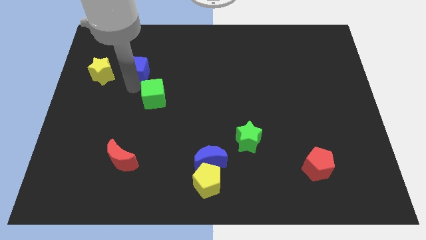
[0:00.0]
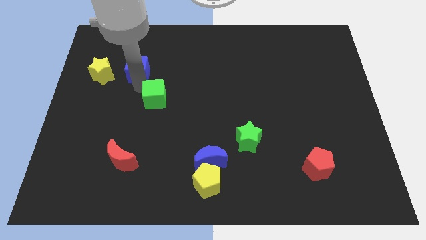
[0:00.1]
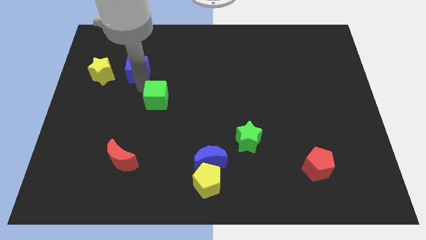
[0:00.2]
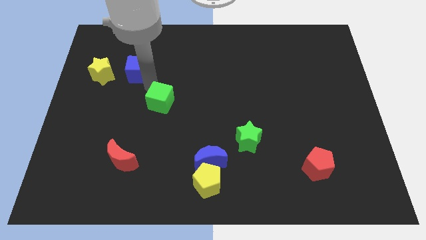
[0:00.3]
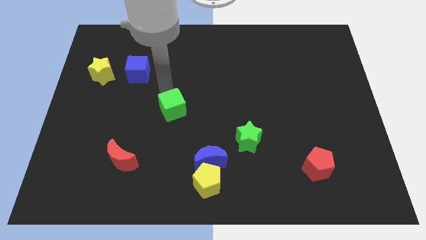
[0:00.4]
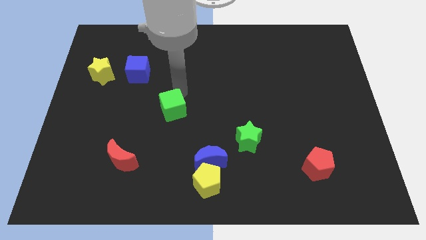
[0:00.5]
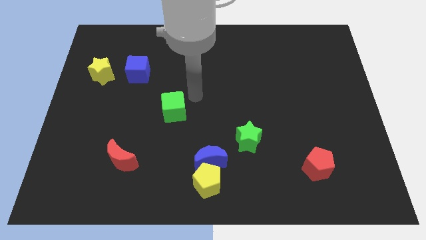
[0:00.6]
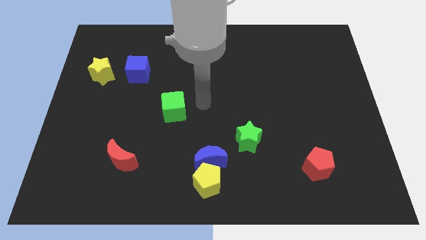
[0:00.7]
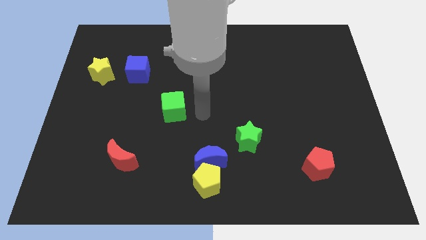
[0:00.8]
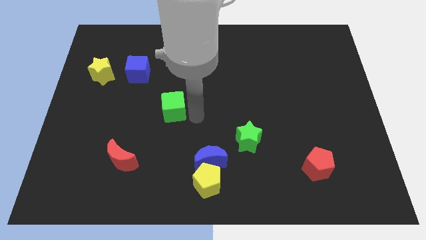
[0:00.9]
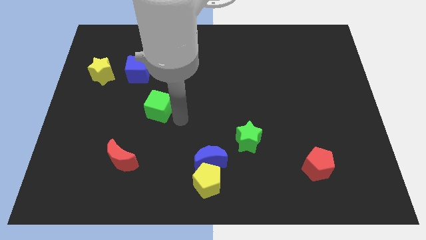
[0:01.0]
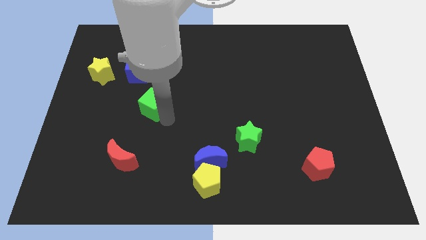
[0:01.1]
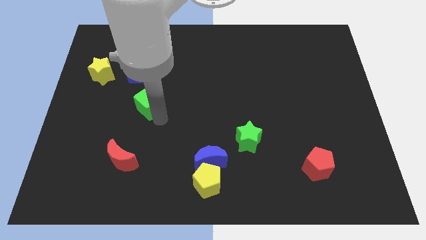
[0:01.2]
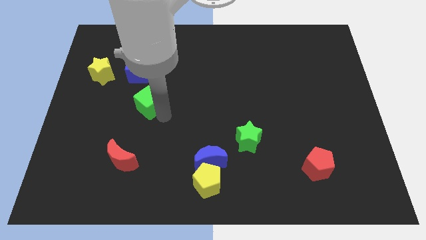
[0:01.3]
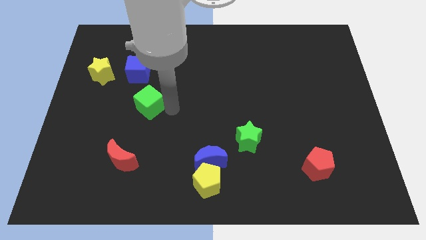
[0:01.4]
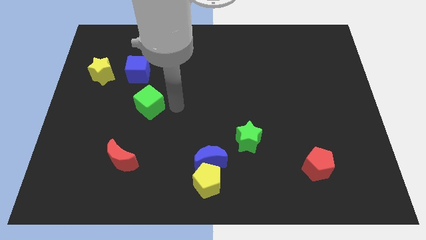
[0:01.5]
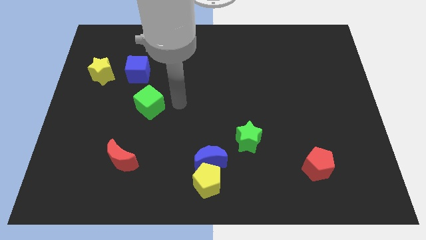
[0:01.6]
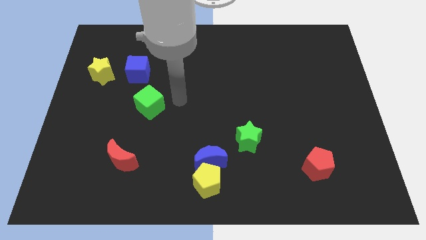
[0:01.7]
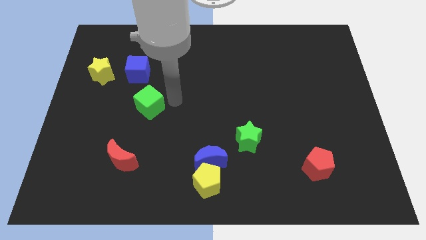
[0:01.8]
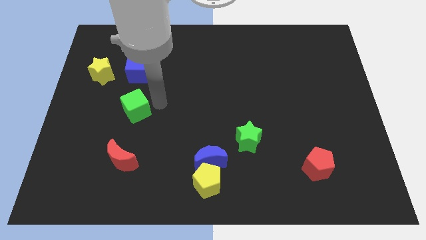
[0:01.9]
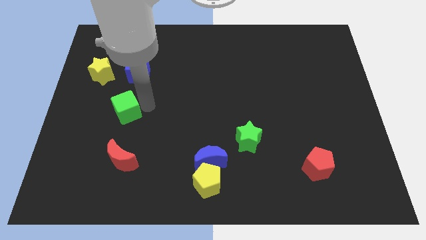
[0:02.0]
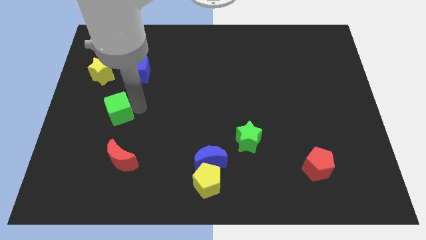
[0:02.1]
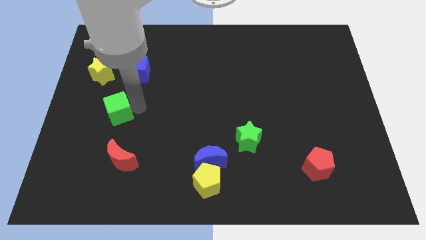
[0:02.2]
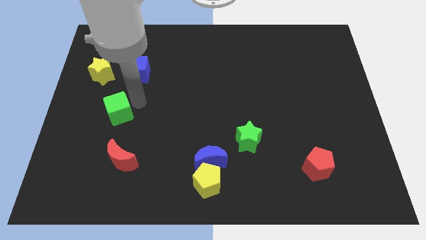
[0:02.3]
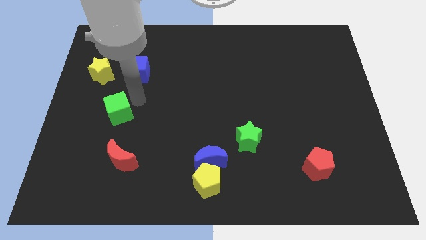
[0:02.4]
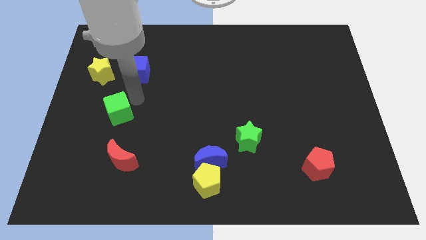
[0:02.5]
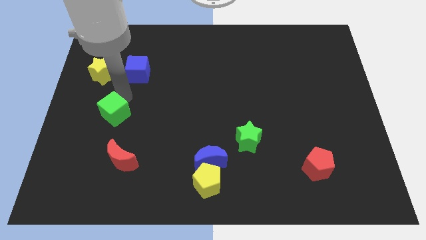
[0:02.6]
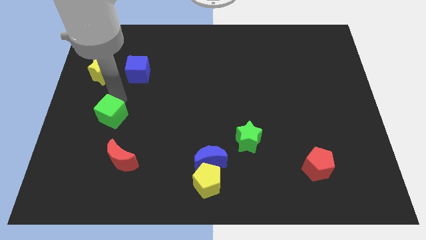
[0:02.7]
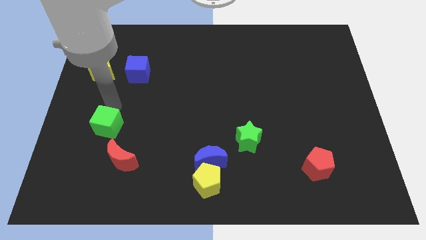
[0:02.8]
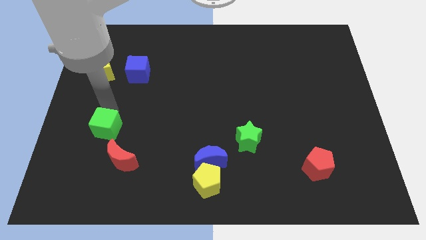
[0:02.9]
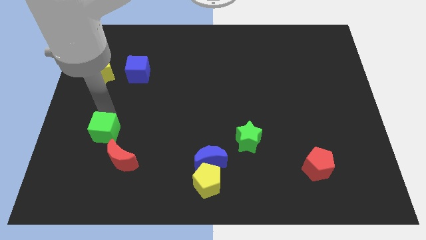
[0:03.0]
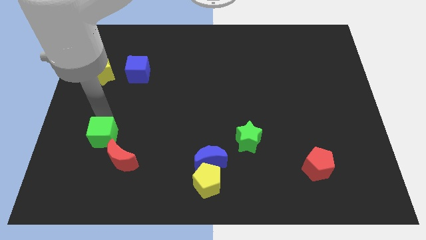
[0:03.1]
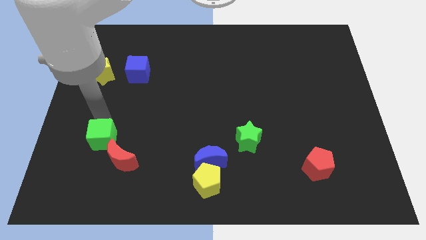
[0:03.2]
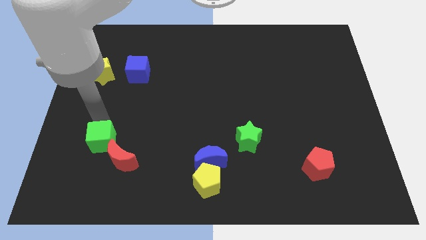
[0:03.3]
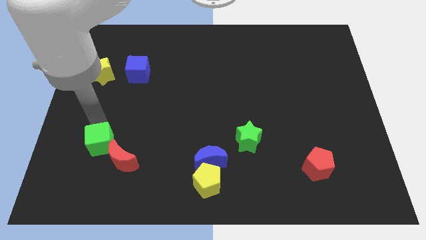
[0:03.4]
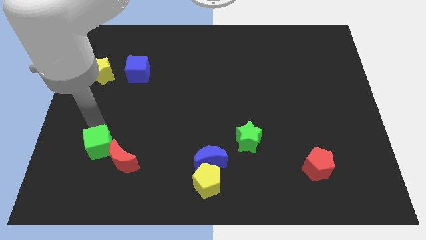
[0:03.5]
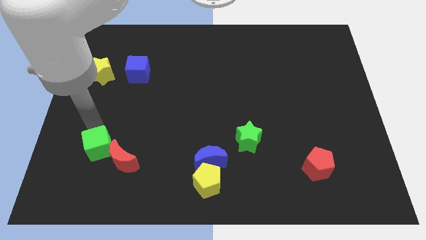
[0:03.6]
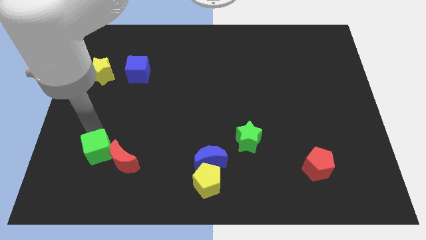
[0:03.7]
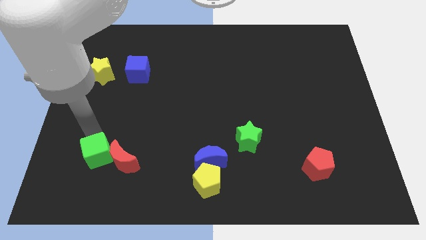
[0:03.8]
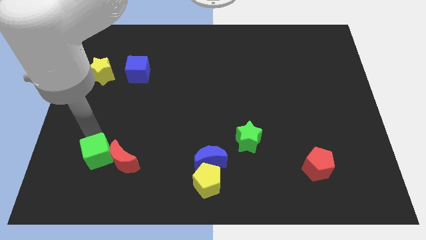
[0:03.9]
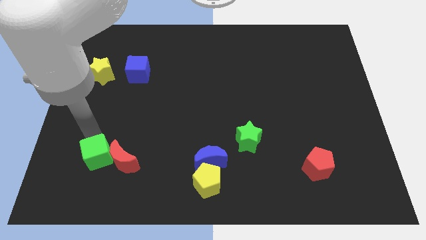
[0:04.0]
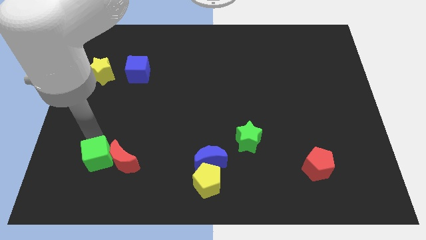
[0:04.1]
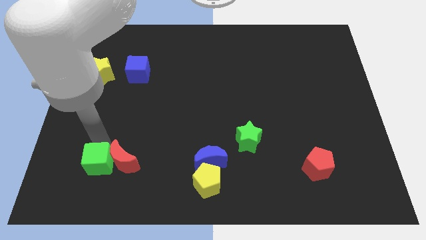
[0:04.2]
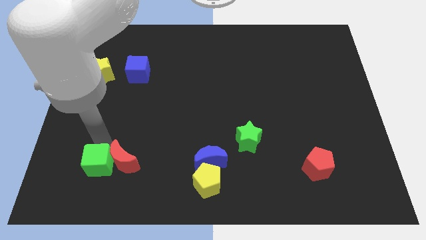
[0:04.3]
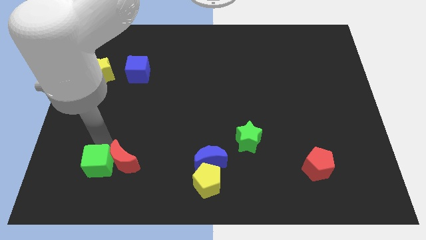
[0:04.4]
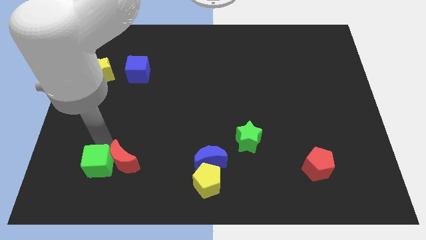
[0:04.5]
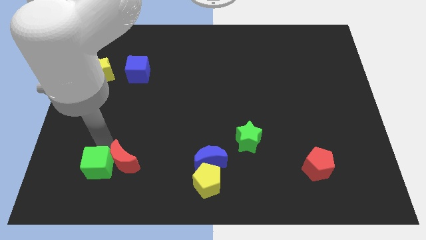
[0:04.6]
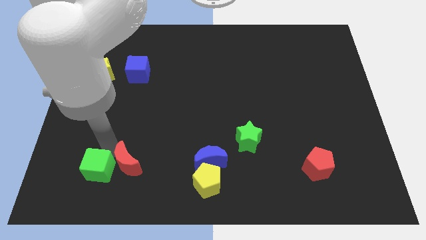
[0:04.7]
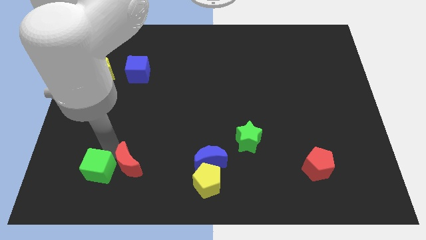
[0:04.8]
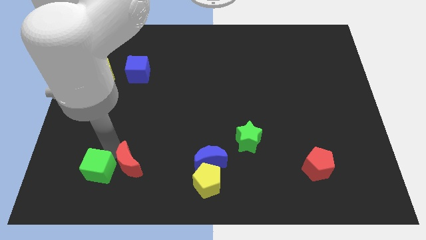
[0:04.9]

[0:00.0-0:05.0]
push the green cube close to the red crescent

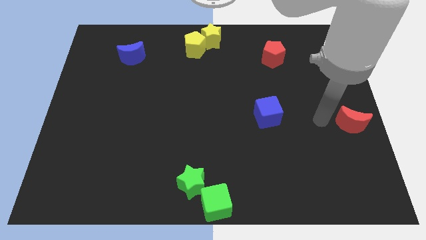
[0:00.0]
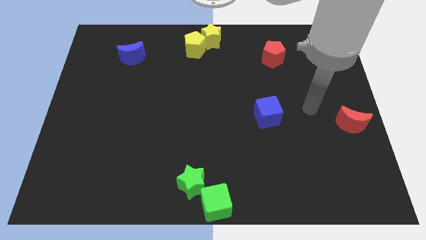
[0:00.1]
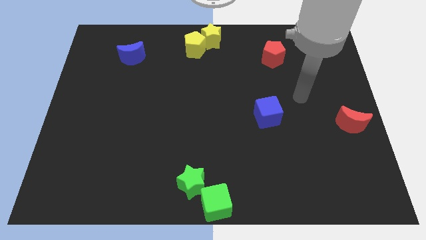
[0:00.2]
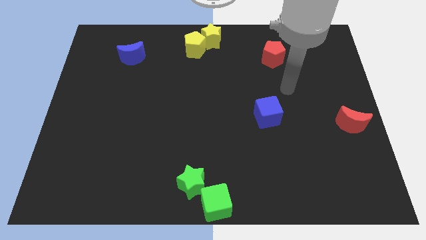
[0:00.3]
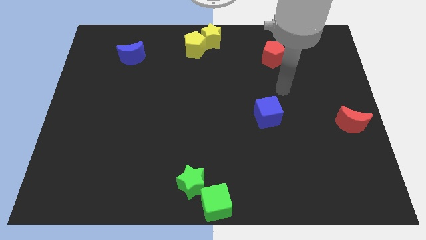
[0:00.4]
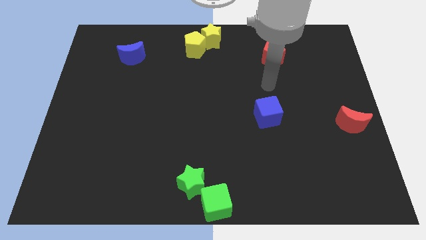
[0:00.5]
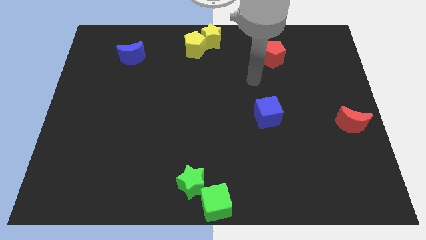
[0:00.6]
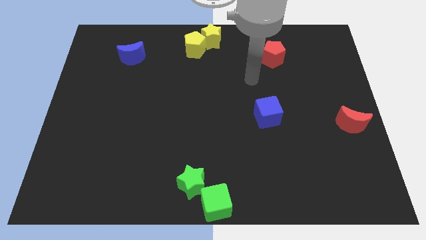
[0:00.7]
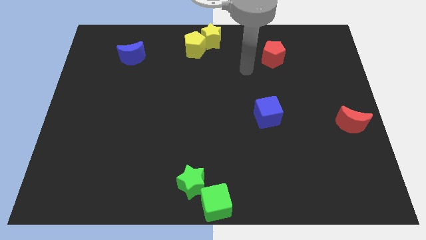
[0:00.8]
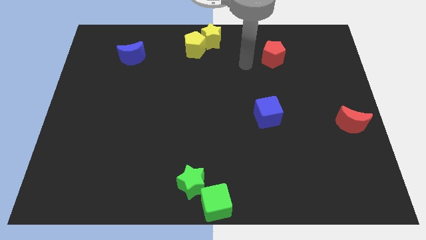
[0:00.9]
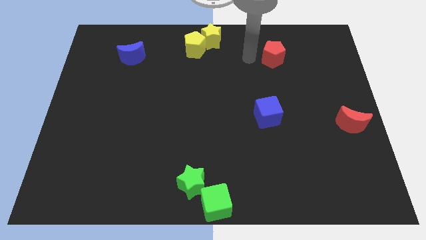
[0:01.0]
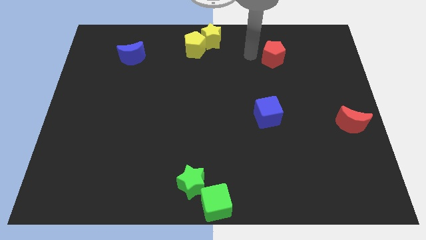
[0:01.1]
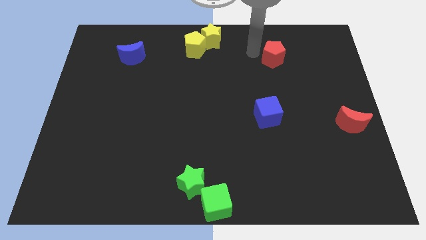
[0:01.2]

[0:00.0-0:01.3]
move your hand to the left side of the red pentagon

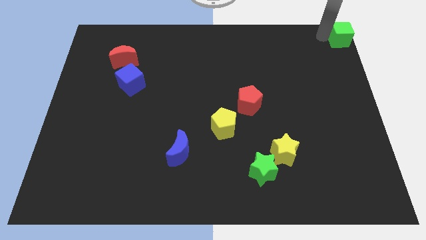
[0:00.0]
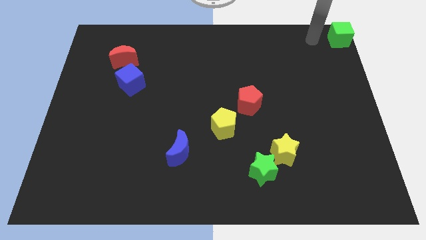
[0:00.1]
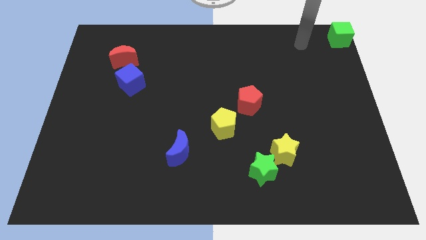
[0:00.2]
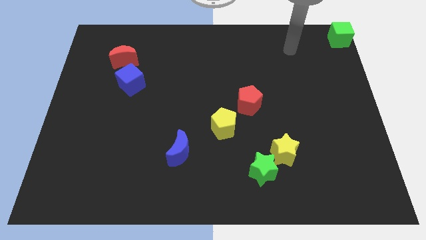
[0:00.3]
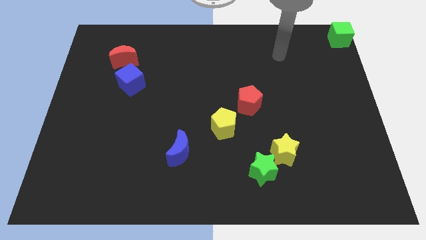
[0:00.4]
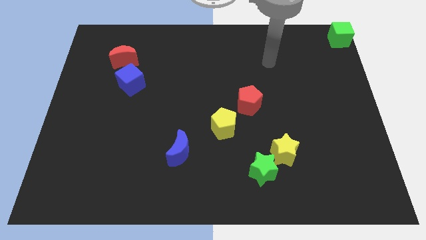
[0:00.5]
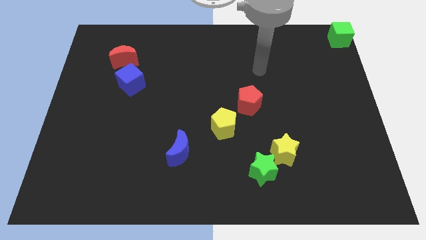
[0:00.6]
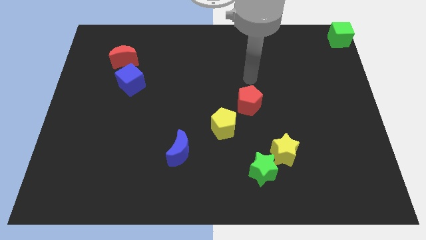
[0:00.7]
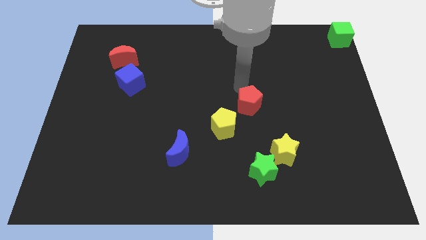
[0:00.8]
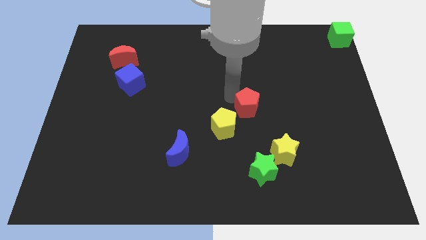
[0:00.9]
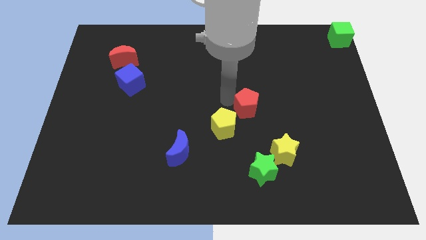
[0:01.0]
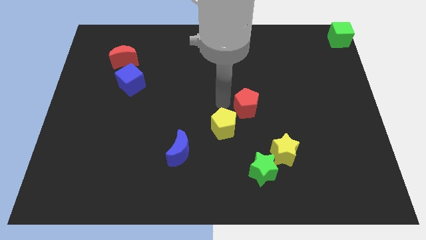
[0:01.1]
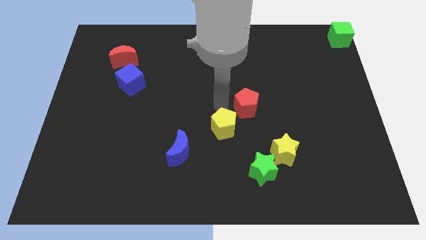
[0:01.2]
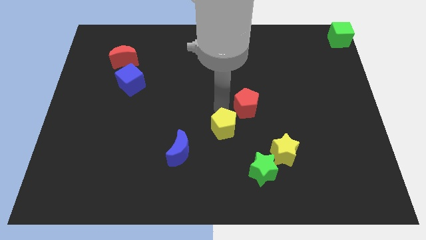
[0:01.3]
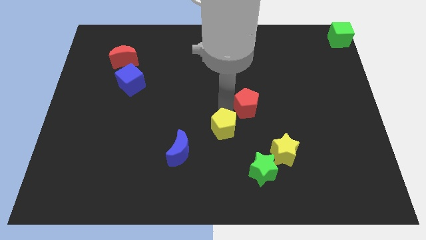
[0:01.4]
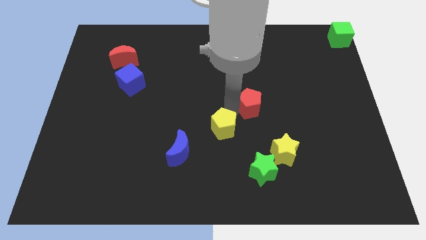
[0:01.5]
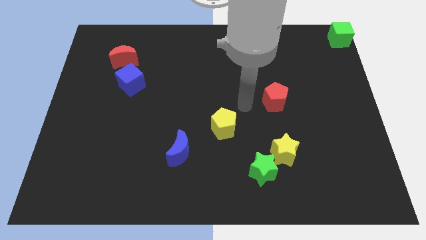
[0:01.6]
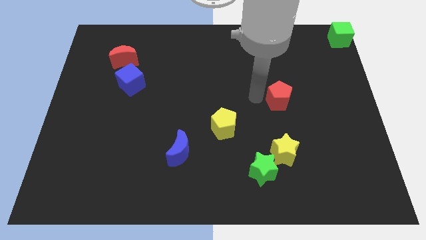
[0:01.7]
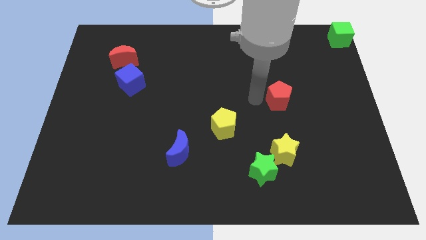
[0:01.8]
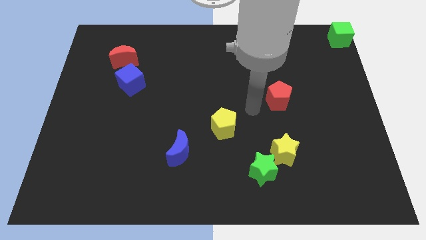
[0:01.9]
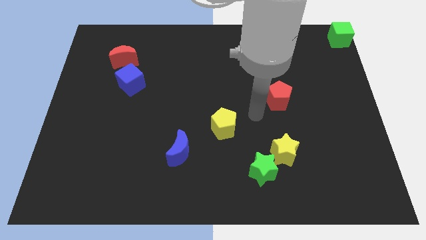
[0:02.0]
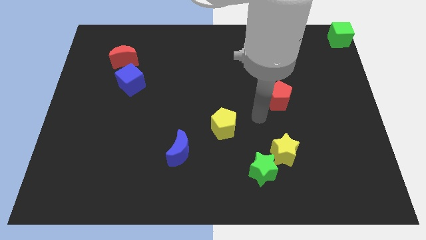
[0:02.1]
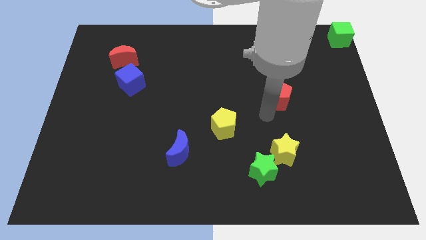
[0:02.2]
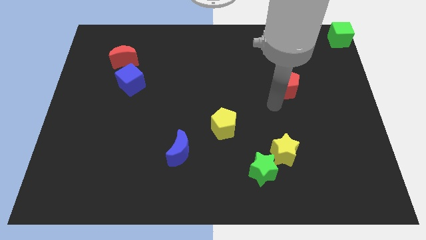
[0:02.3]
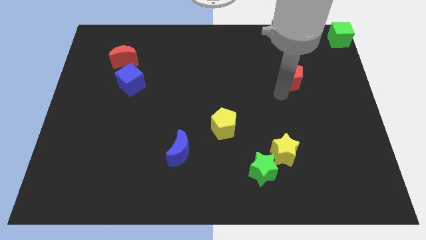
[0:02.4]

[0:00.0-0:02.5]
move the red crescent upwards
